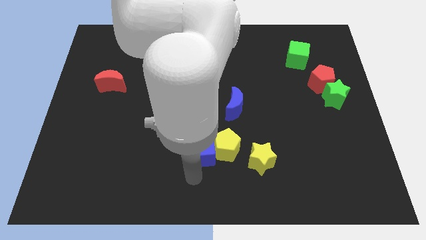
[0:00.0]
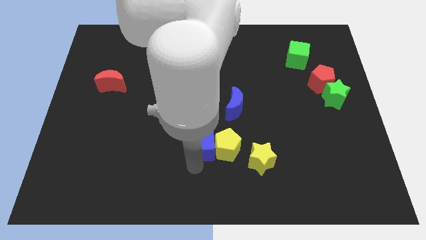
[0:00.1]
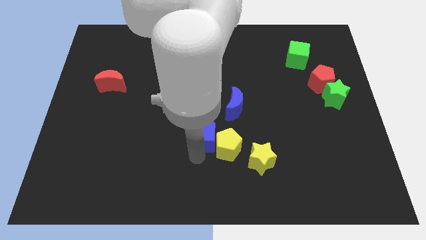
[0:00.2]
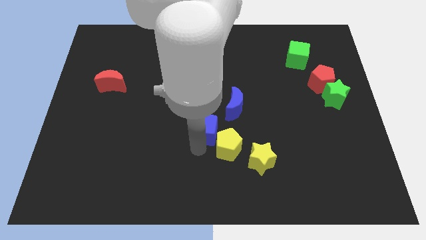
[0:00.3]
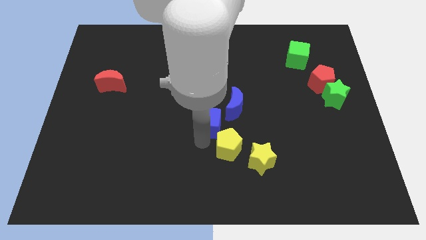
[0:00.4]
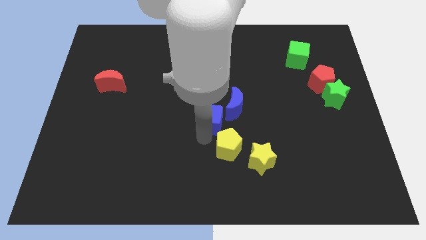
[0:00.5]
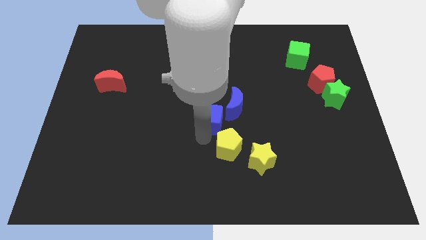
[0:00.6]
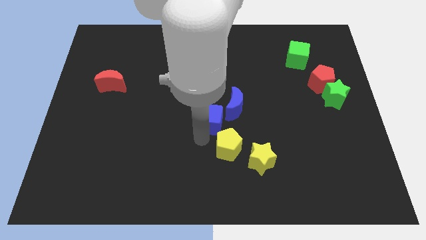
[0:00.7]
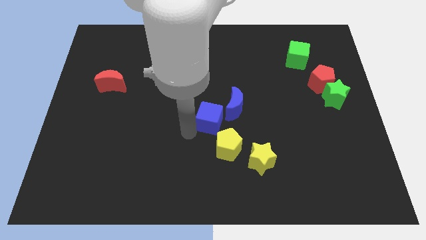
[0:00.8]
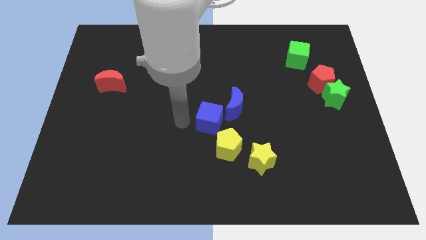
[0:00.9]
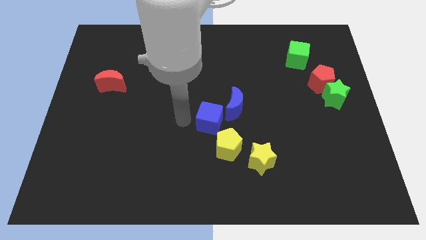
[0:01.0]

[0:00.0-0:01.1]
move blue cube towards blue moon

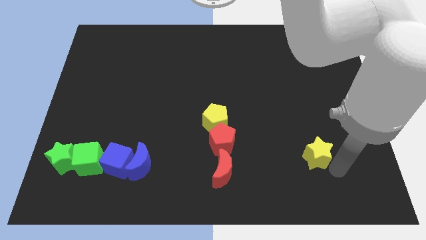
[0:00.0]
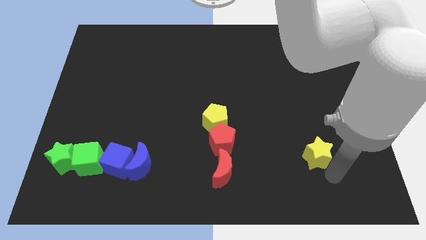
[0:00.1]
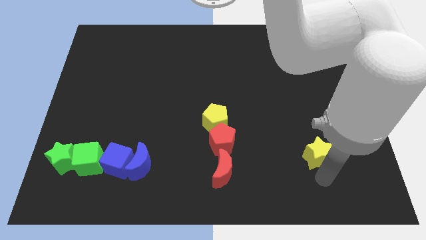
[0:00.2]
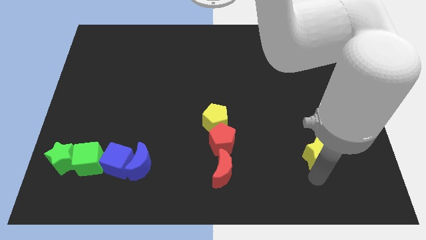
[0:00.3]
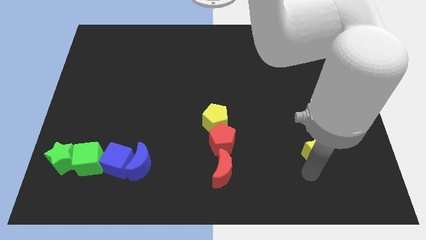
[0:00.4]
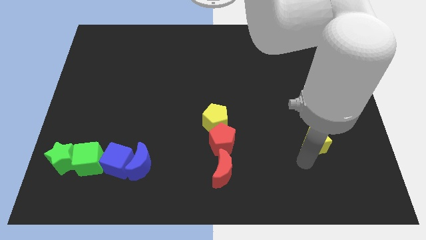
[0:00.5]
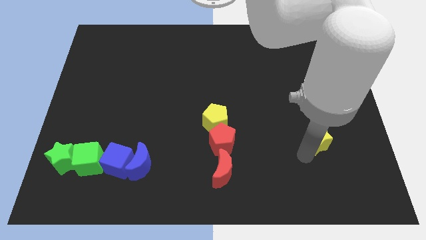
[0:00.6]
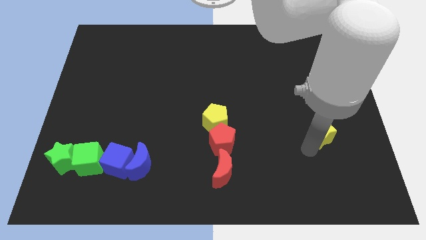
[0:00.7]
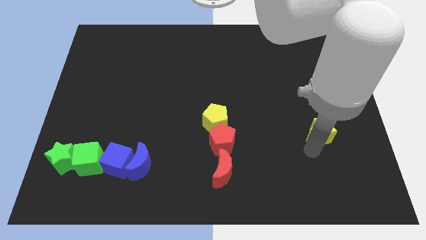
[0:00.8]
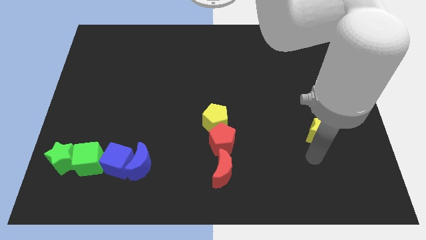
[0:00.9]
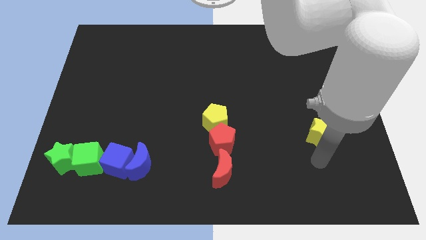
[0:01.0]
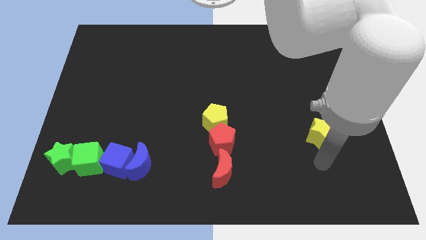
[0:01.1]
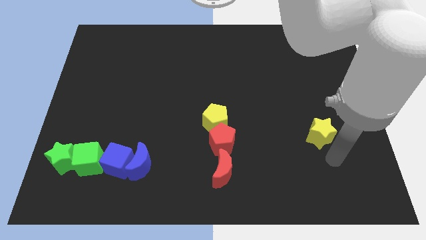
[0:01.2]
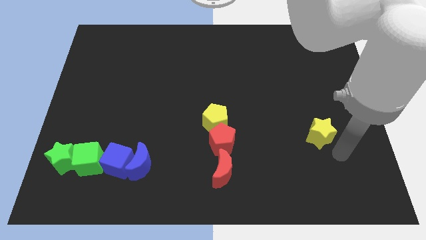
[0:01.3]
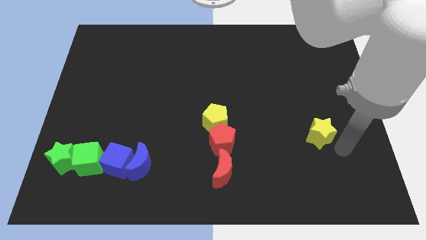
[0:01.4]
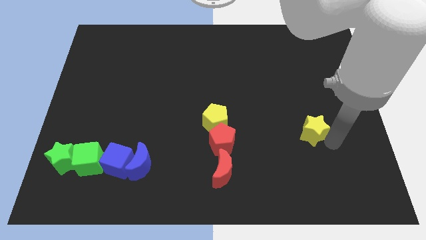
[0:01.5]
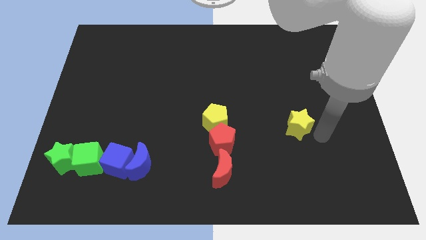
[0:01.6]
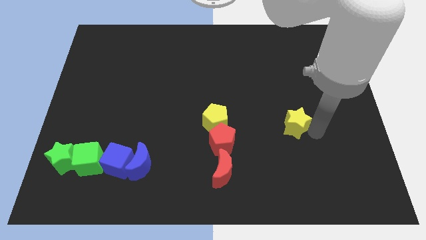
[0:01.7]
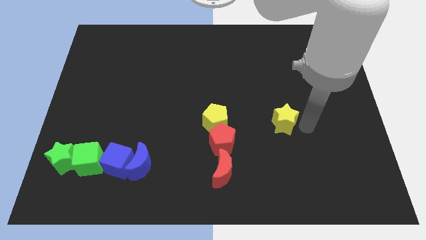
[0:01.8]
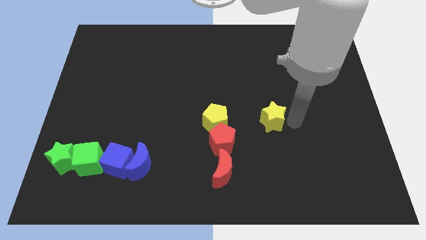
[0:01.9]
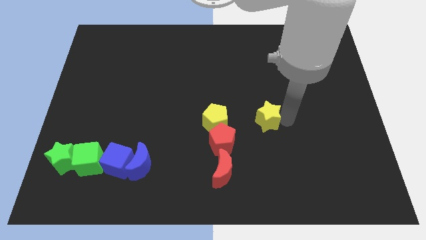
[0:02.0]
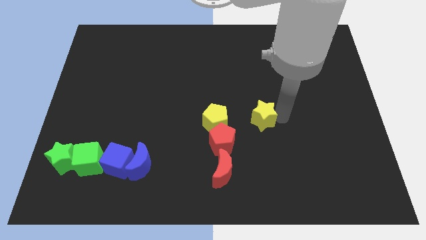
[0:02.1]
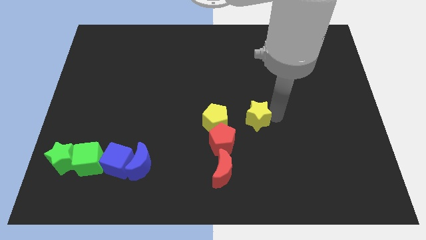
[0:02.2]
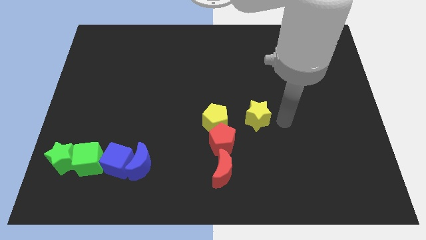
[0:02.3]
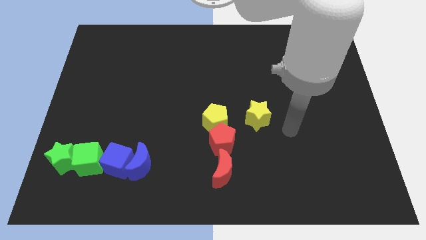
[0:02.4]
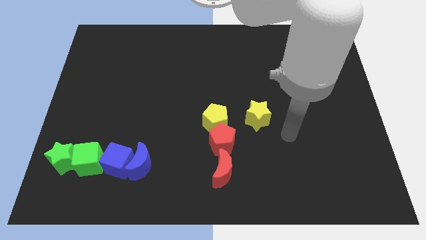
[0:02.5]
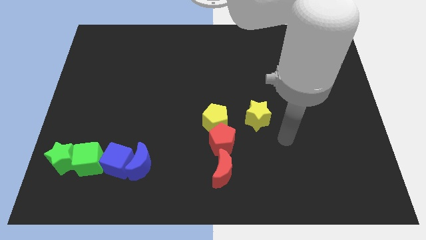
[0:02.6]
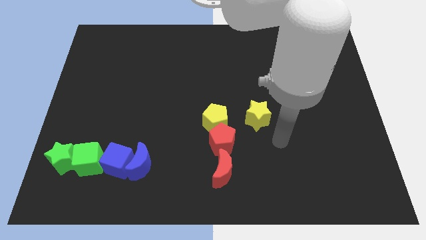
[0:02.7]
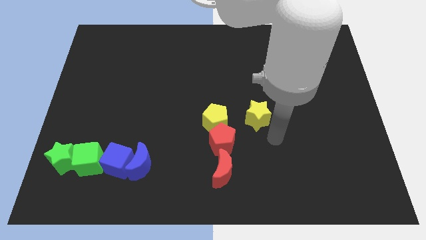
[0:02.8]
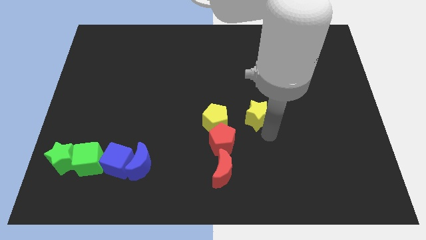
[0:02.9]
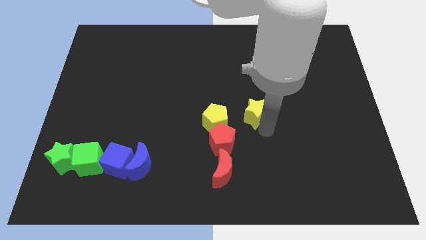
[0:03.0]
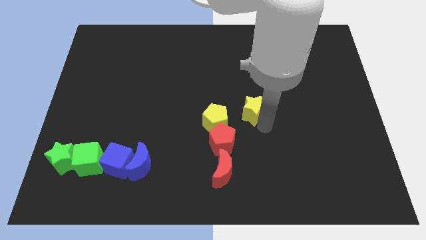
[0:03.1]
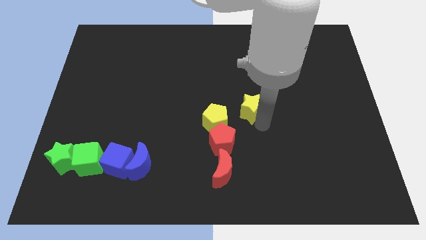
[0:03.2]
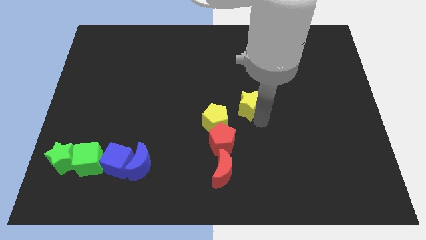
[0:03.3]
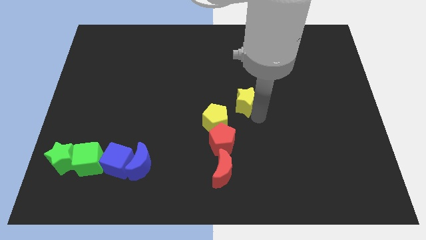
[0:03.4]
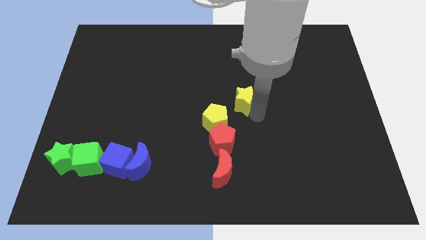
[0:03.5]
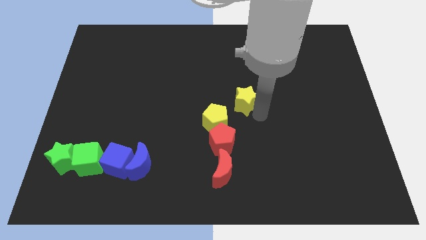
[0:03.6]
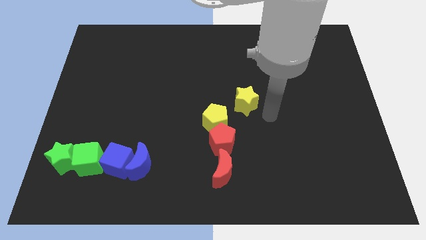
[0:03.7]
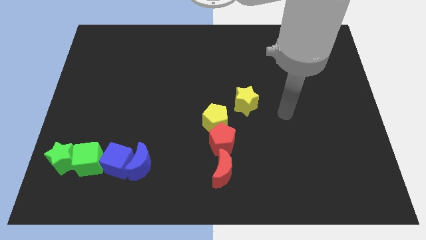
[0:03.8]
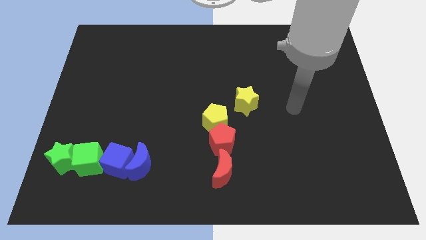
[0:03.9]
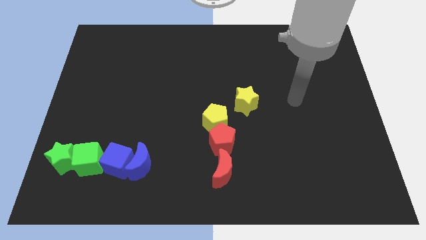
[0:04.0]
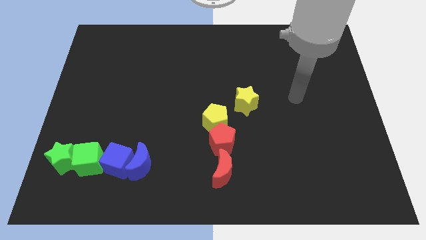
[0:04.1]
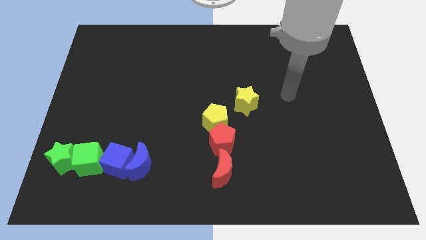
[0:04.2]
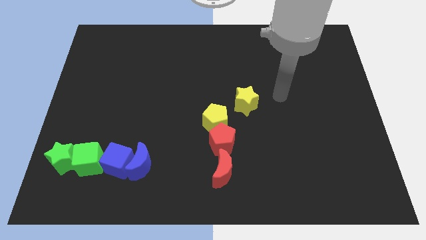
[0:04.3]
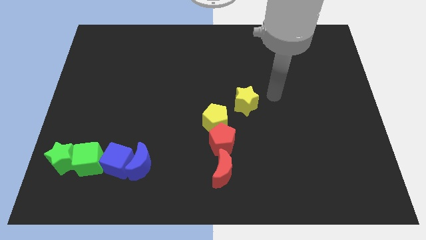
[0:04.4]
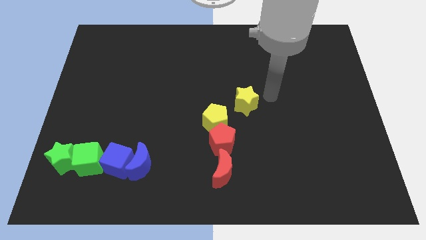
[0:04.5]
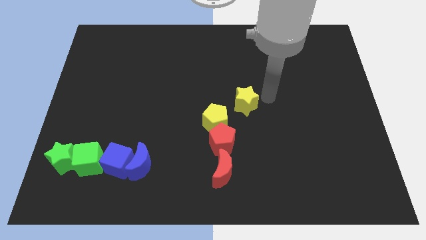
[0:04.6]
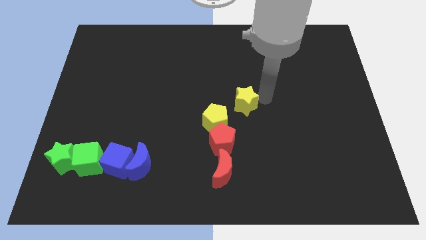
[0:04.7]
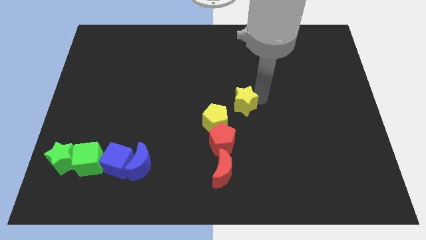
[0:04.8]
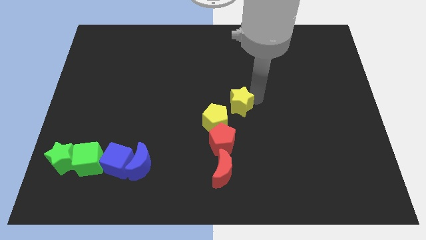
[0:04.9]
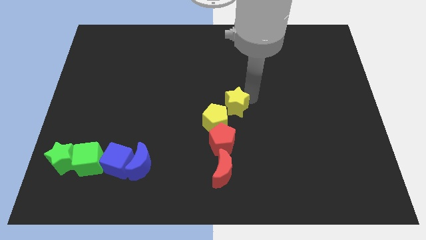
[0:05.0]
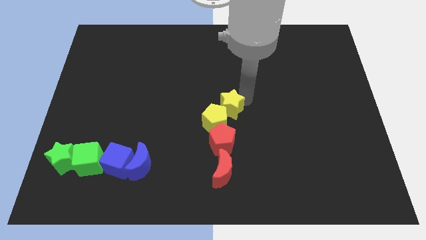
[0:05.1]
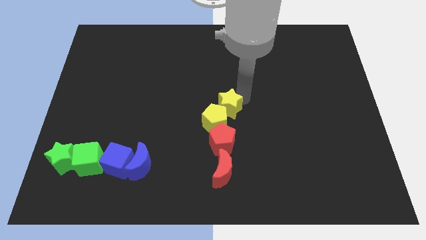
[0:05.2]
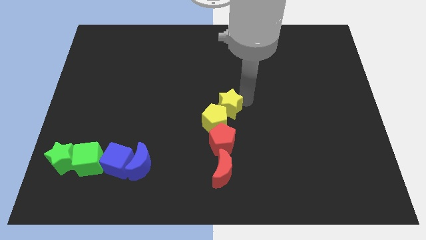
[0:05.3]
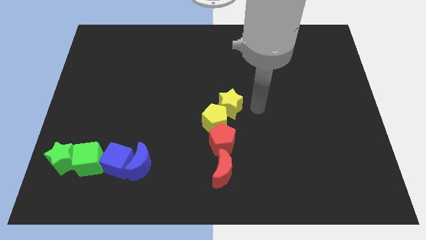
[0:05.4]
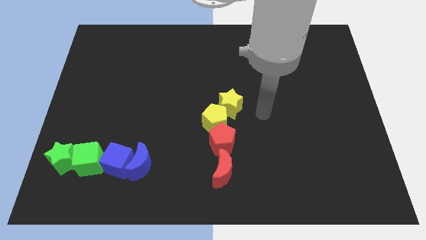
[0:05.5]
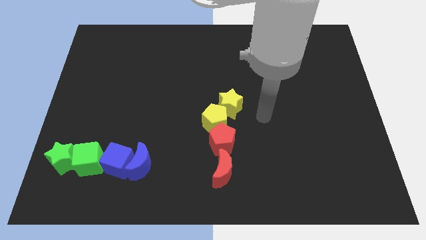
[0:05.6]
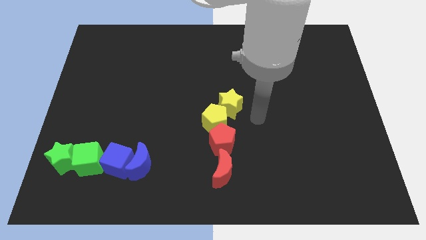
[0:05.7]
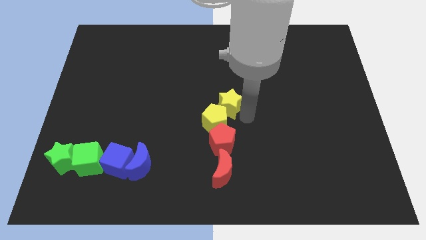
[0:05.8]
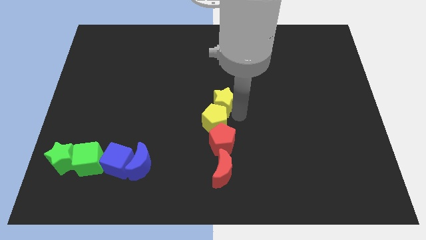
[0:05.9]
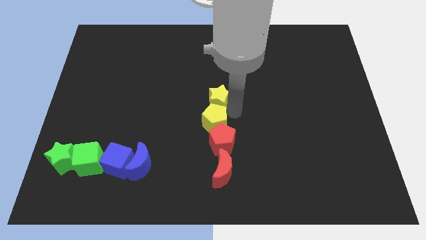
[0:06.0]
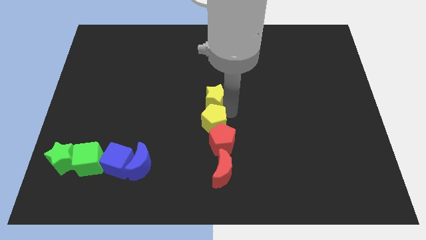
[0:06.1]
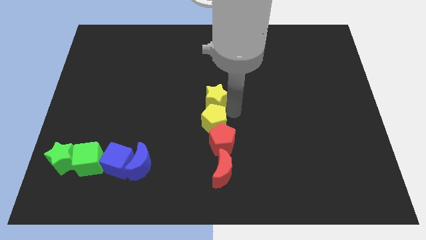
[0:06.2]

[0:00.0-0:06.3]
push the yellow star to the top of yellow pentagon

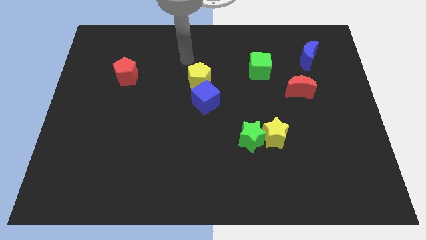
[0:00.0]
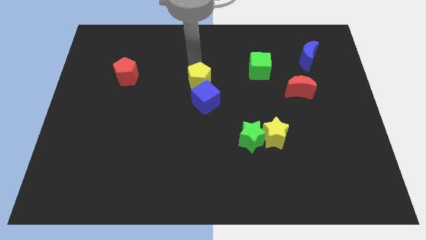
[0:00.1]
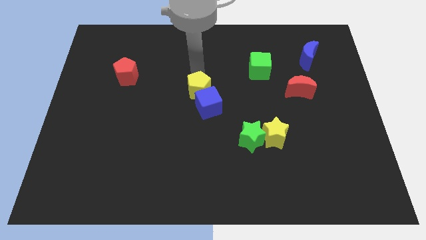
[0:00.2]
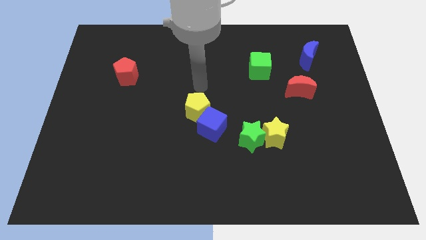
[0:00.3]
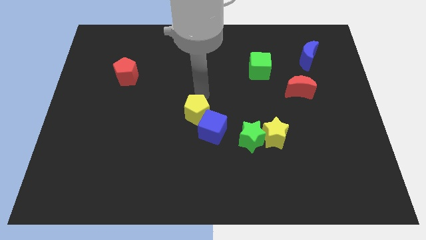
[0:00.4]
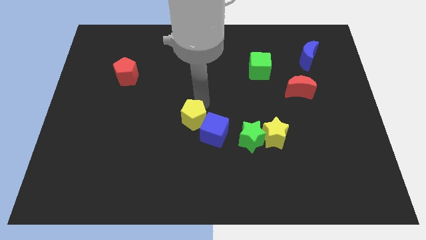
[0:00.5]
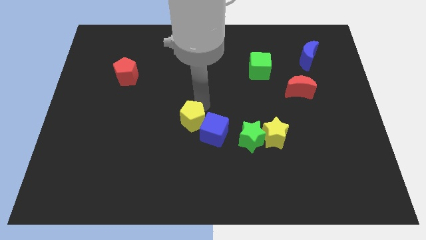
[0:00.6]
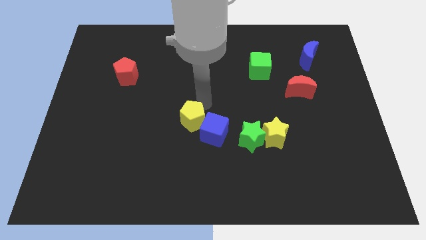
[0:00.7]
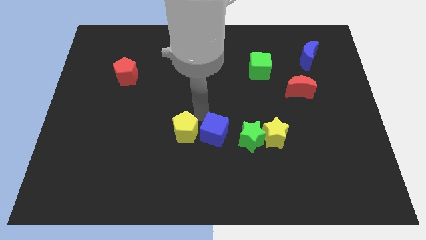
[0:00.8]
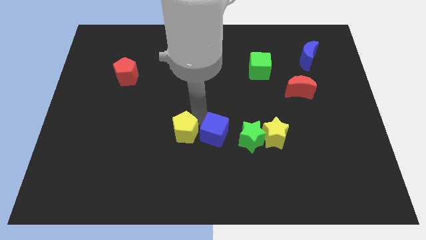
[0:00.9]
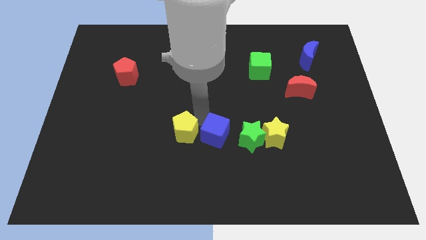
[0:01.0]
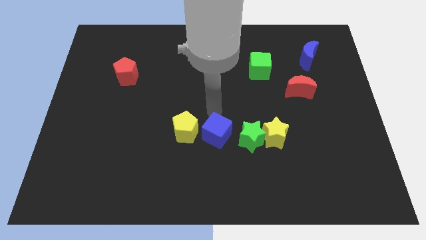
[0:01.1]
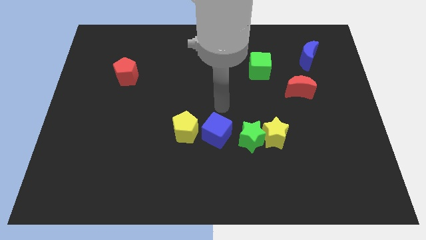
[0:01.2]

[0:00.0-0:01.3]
push the yellow pentagon and the blue cube to the left of the green star

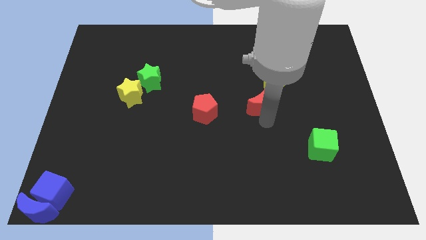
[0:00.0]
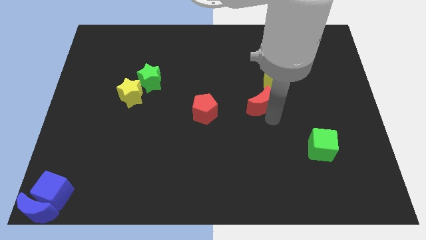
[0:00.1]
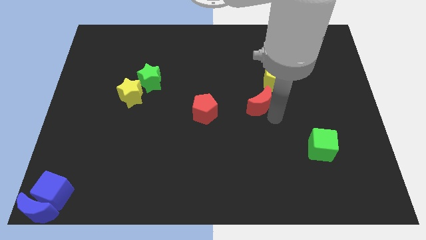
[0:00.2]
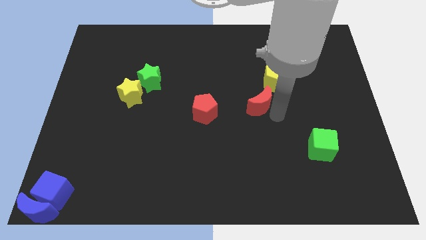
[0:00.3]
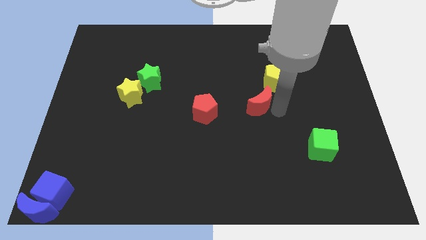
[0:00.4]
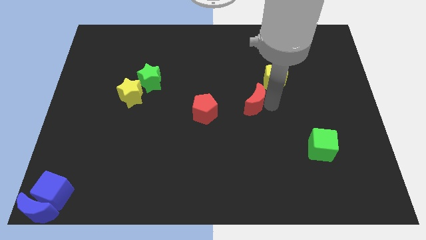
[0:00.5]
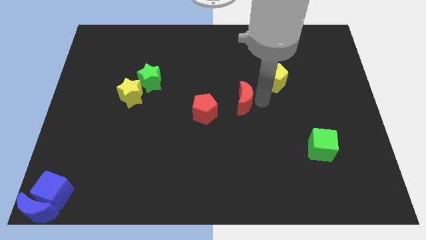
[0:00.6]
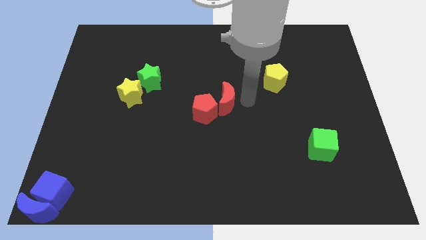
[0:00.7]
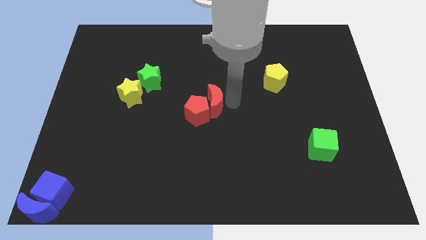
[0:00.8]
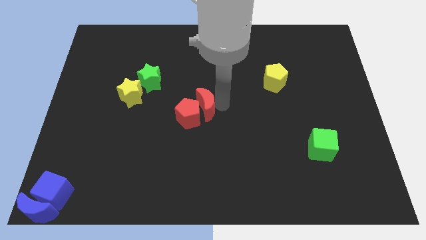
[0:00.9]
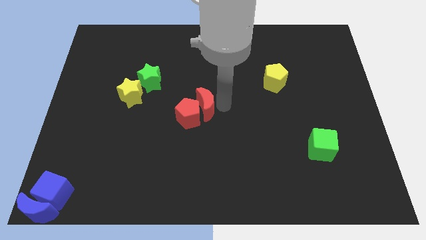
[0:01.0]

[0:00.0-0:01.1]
move red moon into red pentagon
